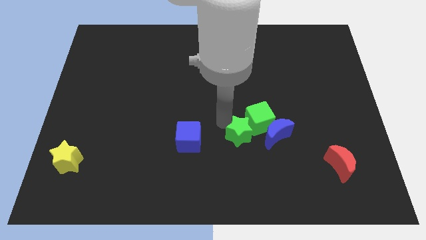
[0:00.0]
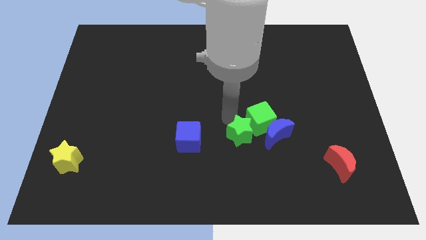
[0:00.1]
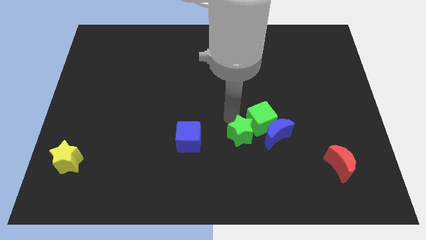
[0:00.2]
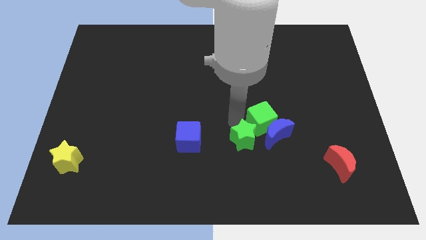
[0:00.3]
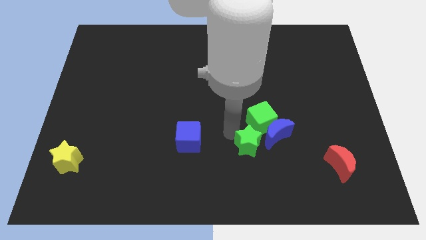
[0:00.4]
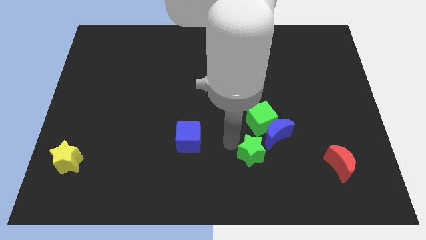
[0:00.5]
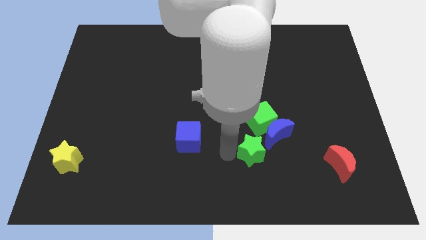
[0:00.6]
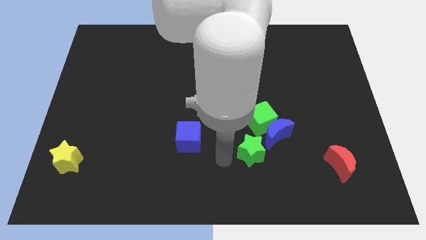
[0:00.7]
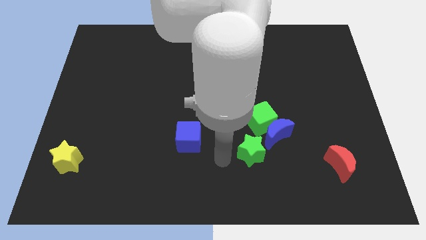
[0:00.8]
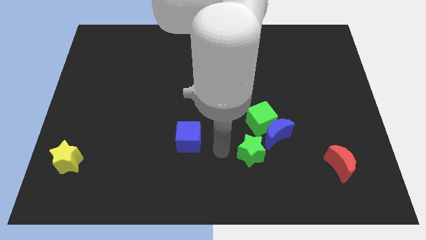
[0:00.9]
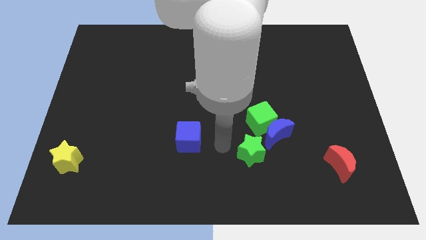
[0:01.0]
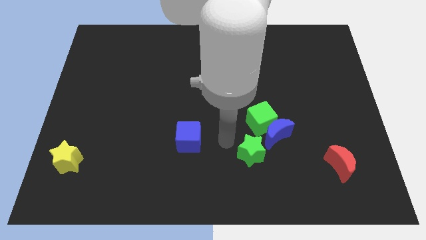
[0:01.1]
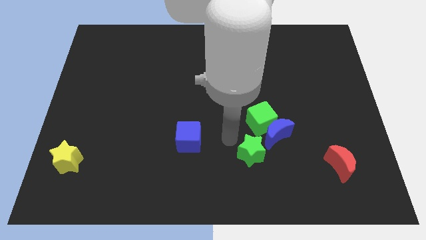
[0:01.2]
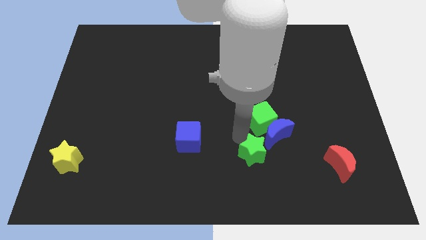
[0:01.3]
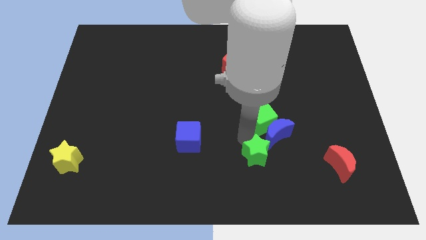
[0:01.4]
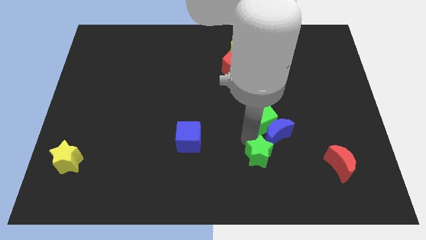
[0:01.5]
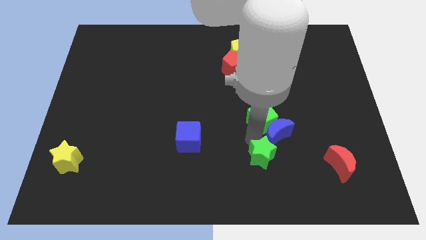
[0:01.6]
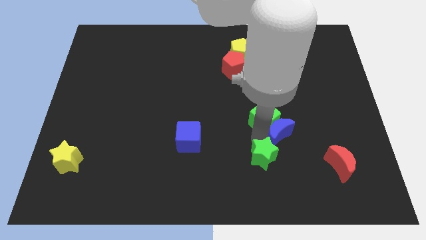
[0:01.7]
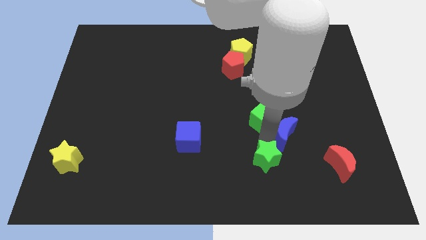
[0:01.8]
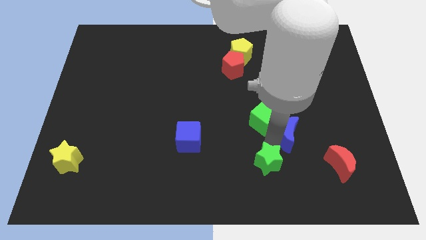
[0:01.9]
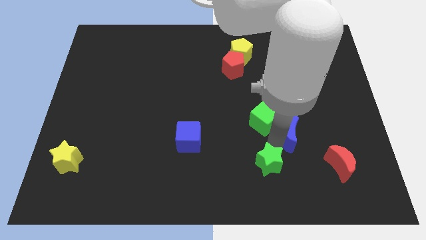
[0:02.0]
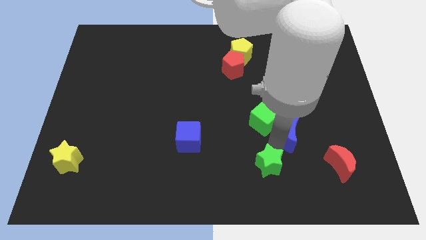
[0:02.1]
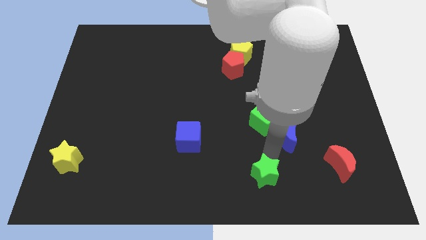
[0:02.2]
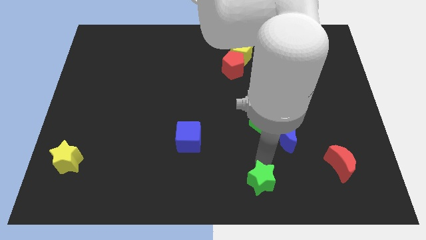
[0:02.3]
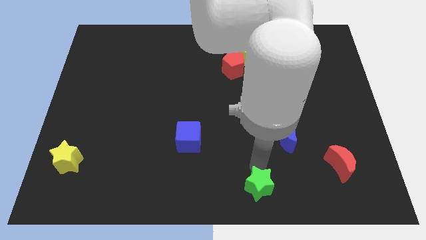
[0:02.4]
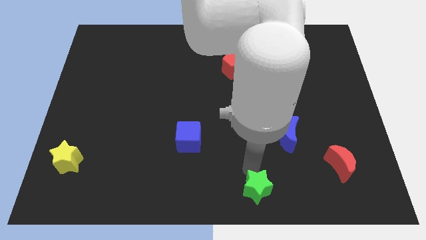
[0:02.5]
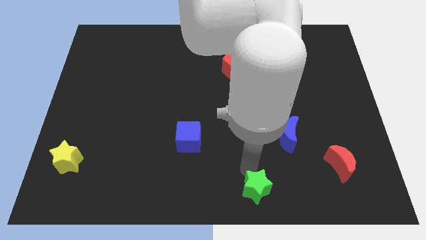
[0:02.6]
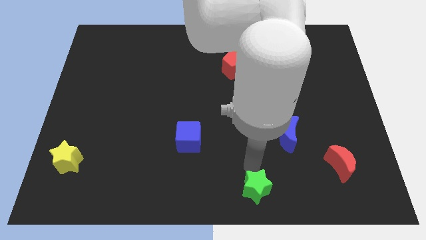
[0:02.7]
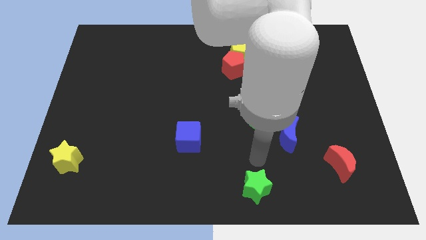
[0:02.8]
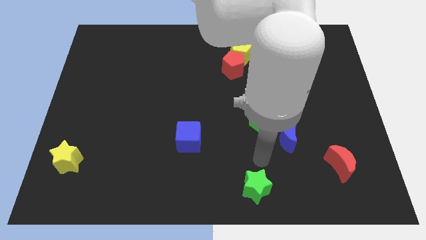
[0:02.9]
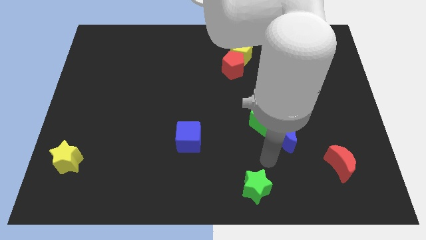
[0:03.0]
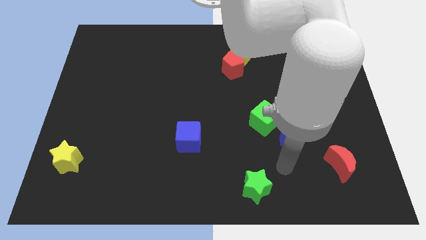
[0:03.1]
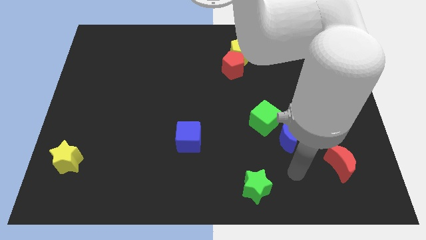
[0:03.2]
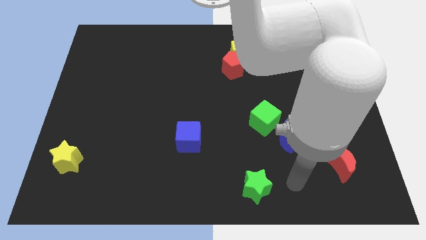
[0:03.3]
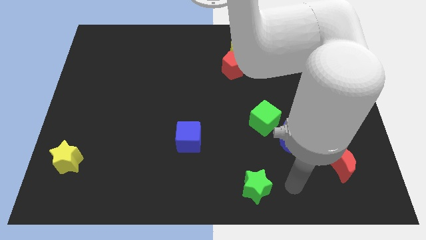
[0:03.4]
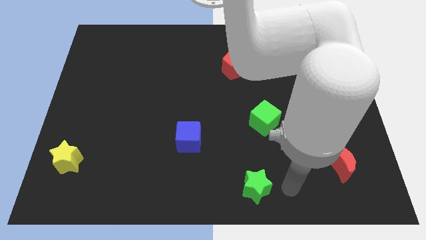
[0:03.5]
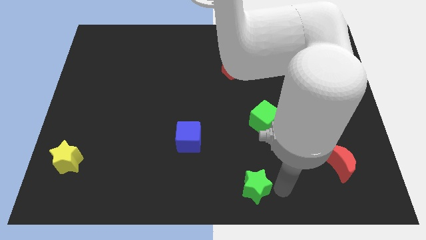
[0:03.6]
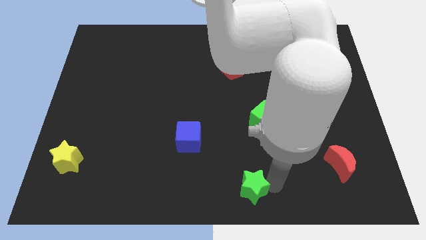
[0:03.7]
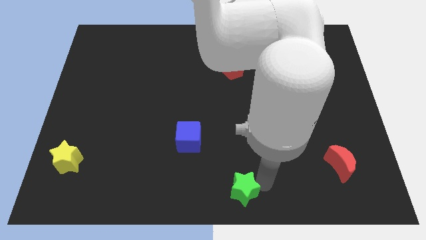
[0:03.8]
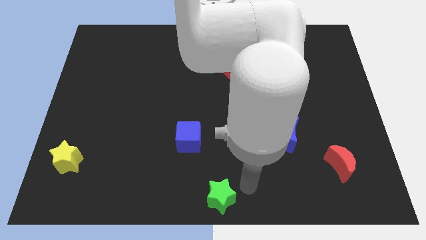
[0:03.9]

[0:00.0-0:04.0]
push the green star to bottom center of the board

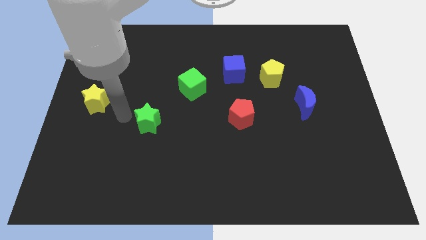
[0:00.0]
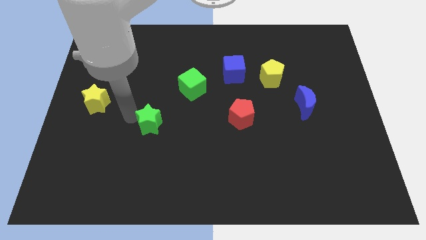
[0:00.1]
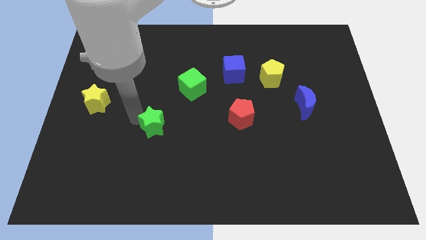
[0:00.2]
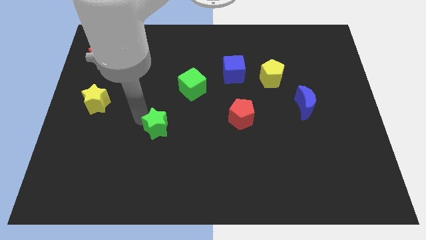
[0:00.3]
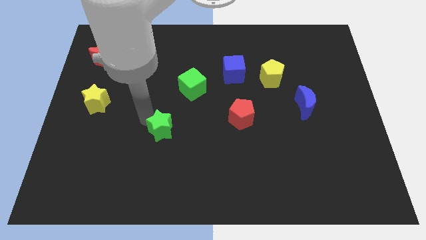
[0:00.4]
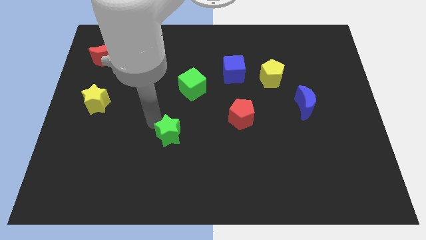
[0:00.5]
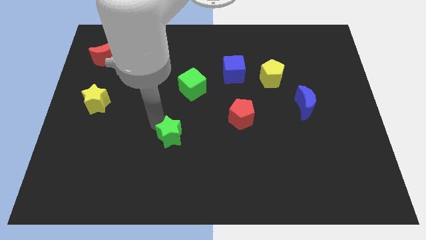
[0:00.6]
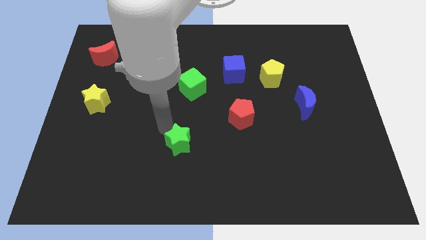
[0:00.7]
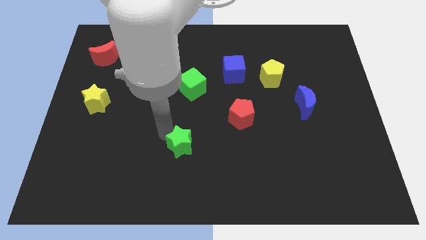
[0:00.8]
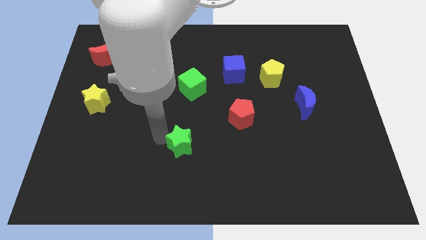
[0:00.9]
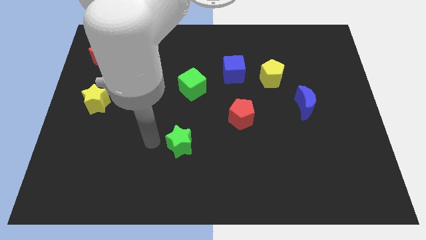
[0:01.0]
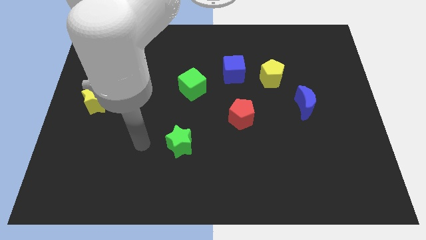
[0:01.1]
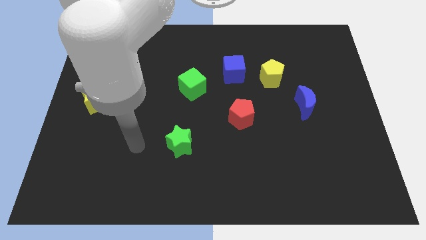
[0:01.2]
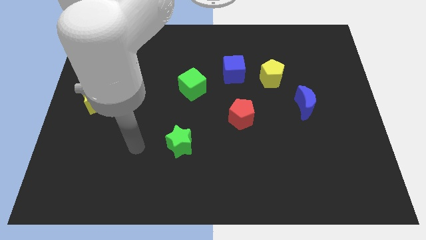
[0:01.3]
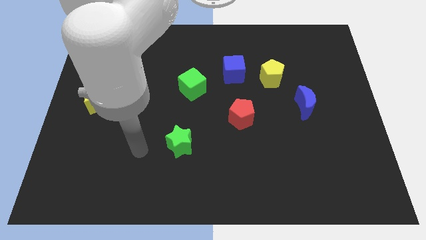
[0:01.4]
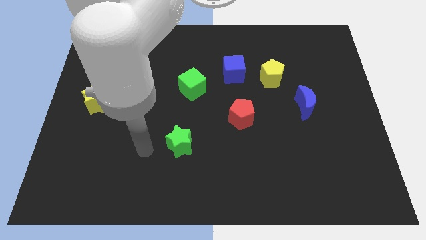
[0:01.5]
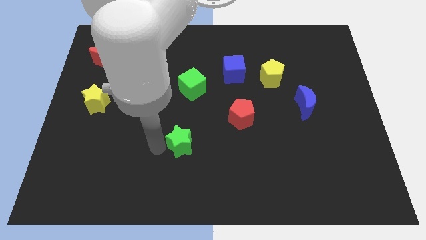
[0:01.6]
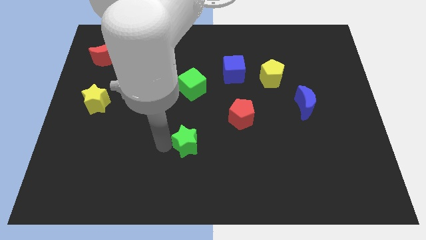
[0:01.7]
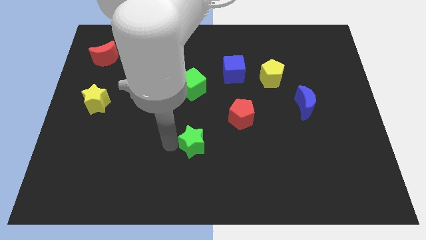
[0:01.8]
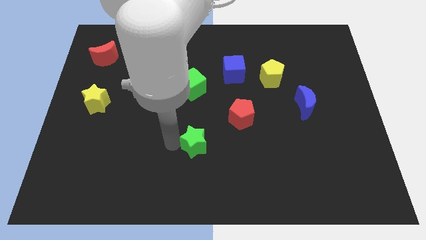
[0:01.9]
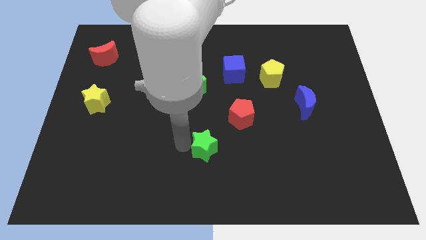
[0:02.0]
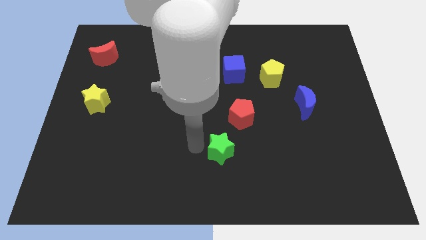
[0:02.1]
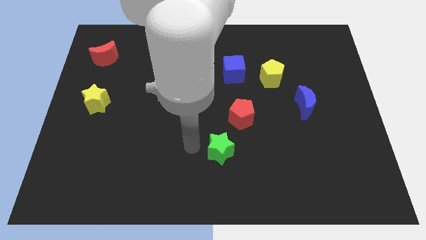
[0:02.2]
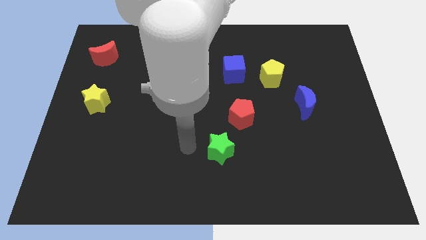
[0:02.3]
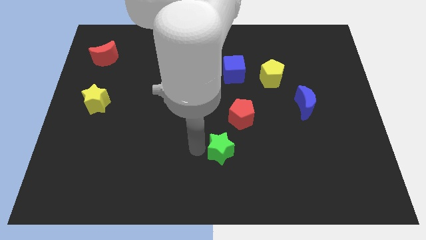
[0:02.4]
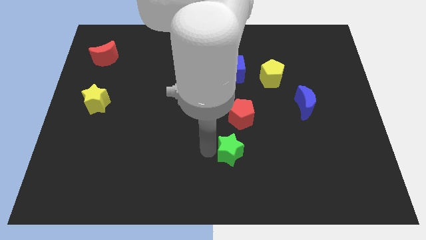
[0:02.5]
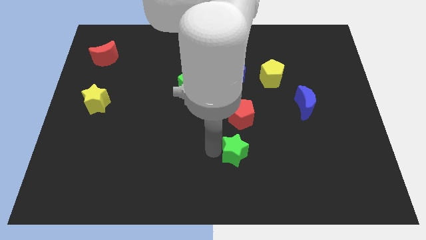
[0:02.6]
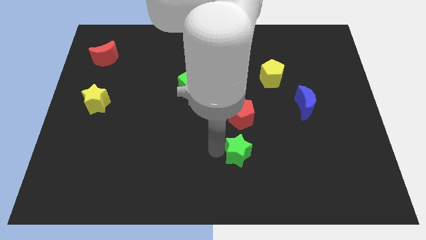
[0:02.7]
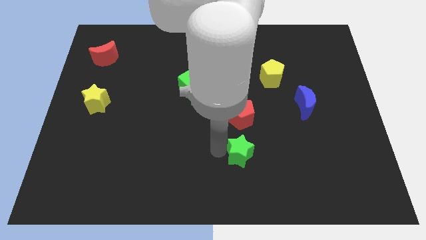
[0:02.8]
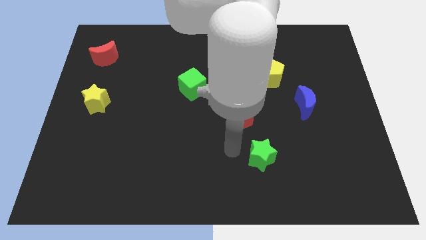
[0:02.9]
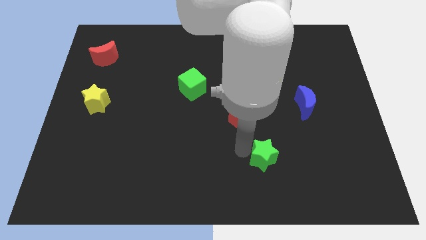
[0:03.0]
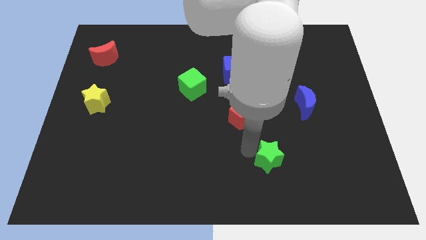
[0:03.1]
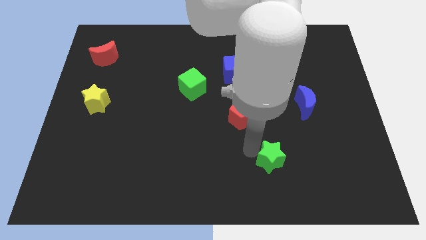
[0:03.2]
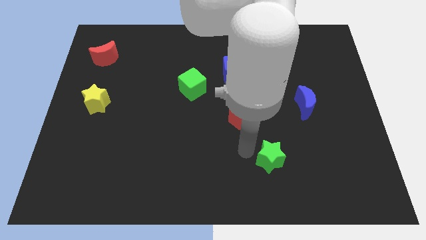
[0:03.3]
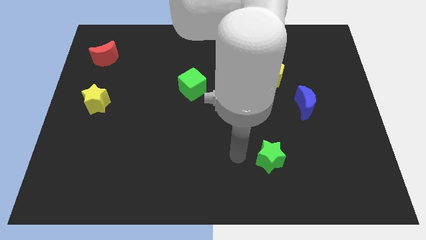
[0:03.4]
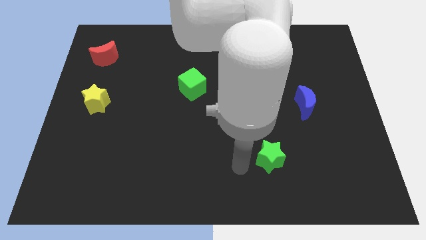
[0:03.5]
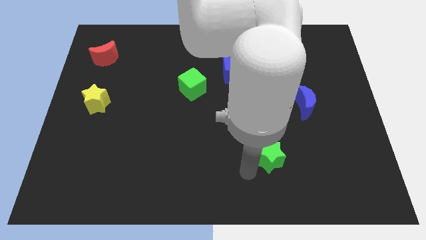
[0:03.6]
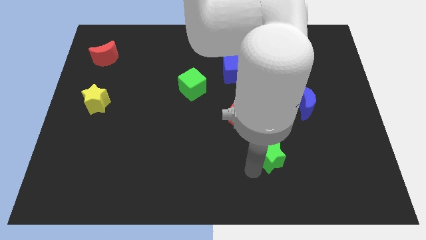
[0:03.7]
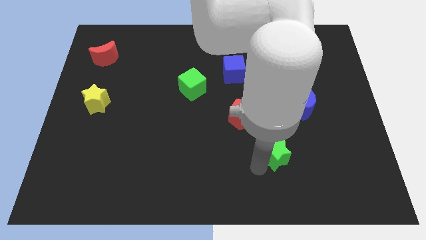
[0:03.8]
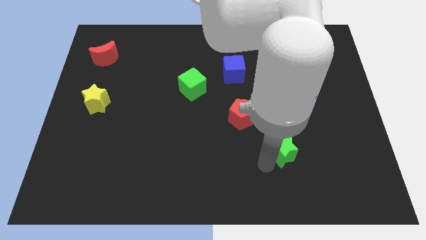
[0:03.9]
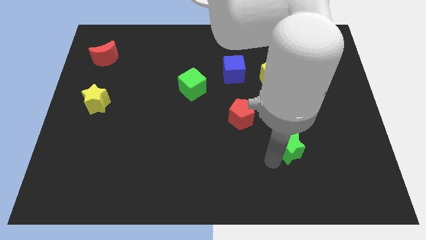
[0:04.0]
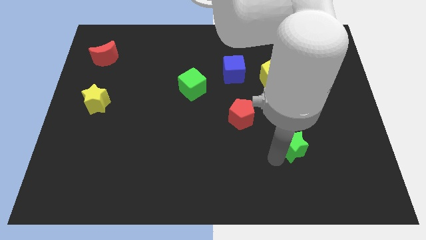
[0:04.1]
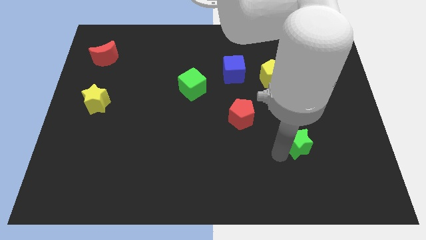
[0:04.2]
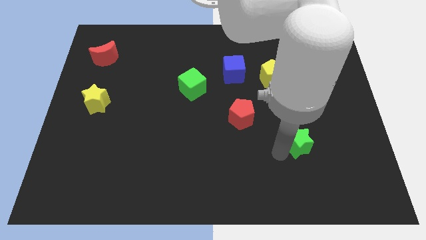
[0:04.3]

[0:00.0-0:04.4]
place the green star below the red pentagon

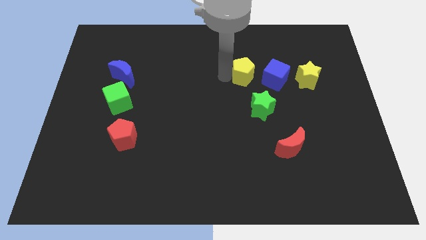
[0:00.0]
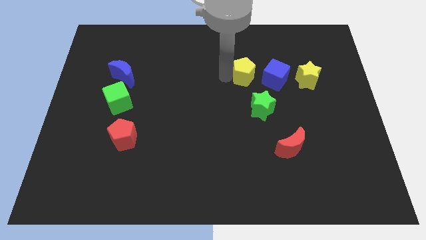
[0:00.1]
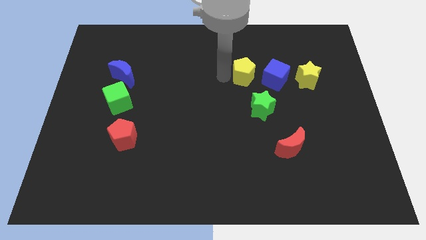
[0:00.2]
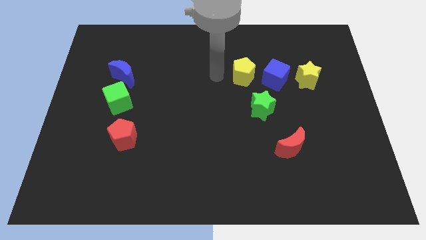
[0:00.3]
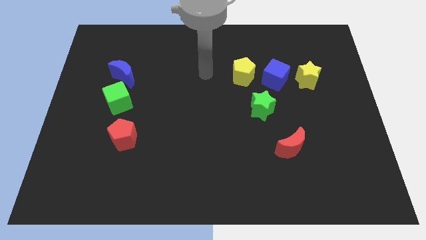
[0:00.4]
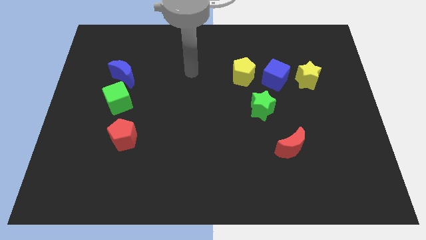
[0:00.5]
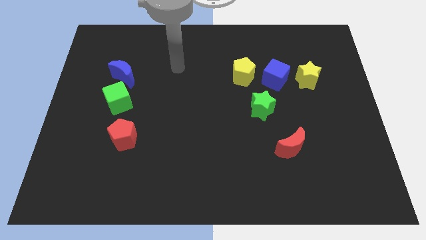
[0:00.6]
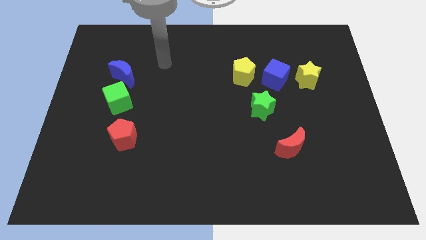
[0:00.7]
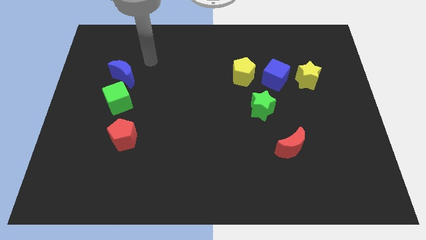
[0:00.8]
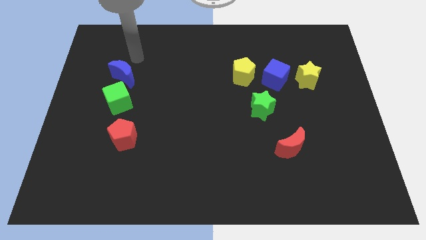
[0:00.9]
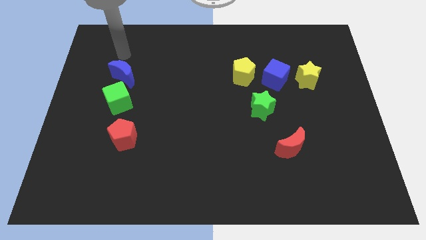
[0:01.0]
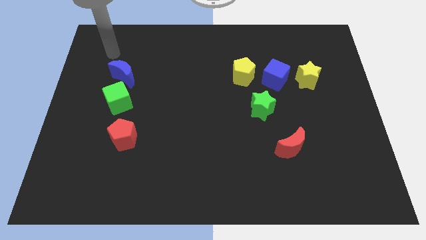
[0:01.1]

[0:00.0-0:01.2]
move the arm away from the yellow pentagon
